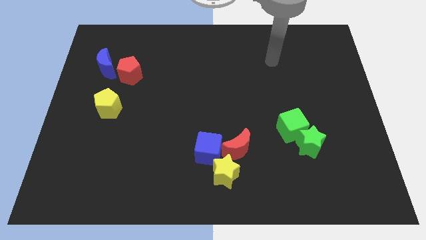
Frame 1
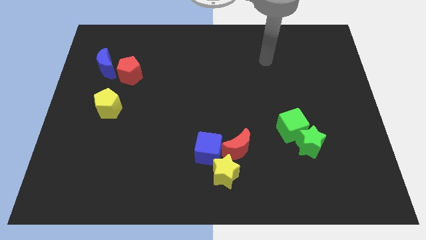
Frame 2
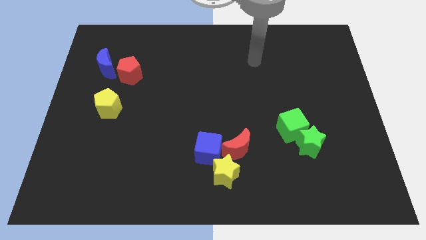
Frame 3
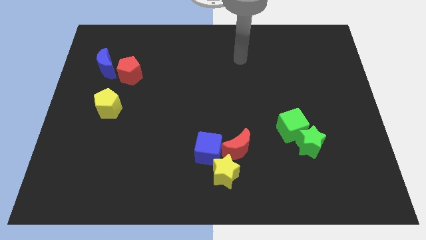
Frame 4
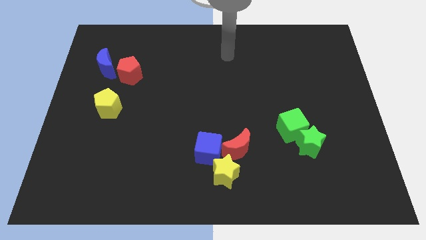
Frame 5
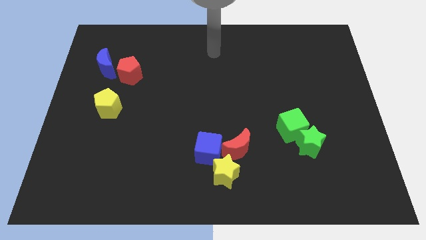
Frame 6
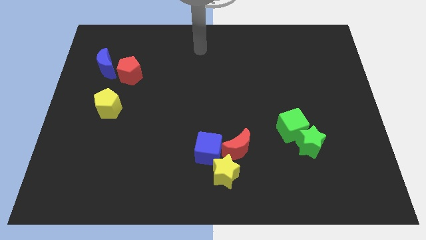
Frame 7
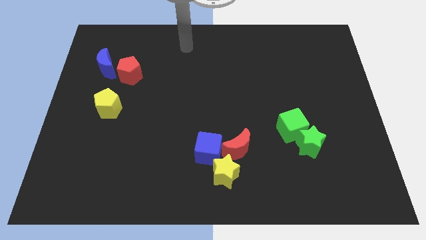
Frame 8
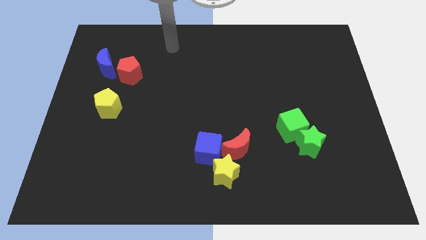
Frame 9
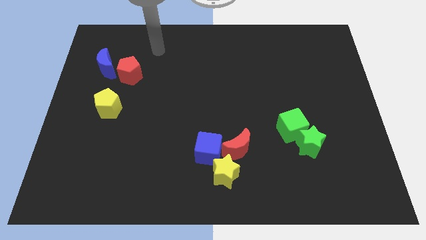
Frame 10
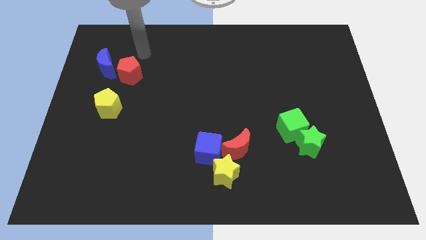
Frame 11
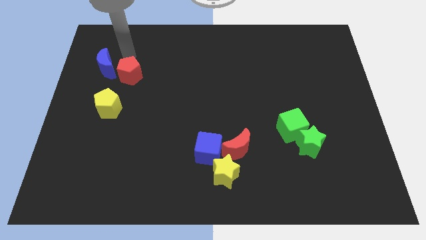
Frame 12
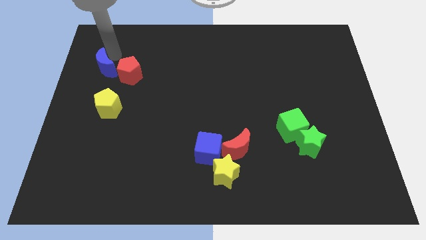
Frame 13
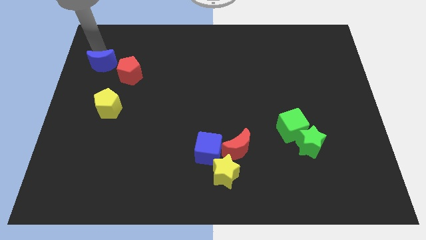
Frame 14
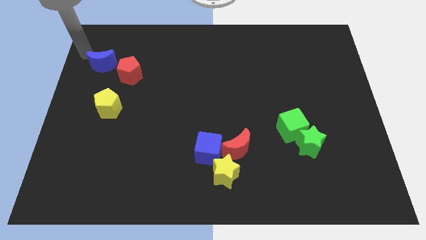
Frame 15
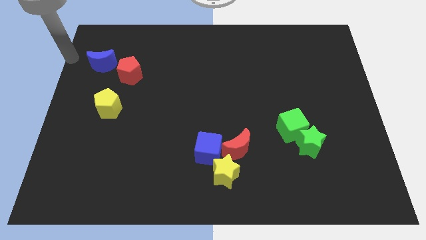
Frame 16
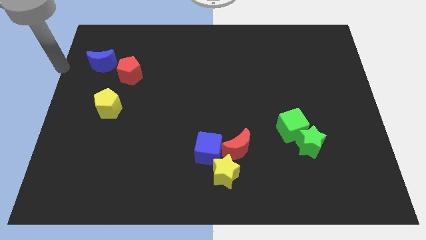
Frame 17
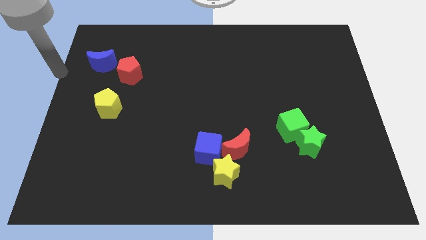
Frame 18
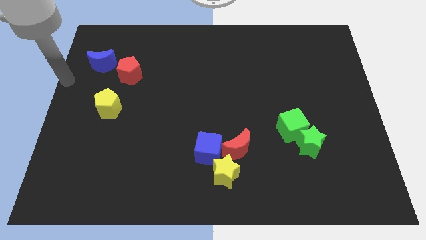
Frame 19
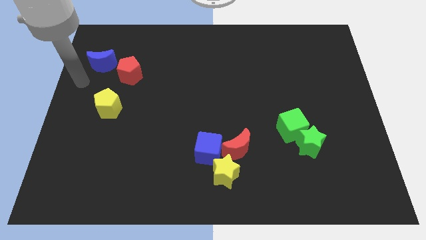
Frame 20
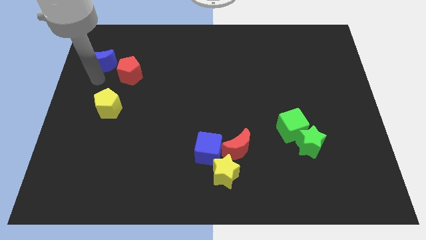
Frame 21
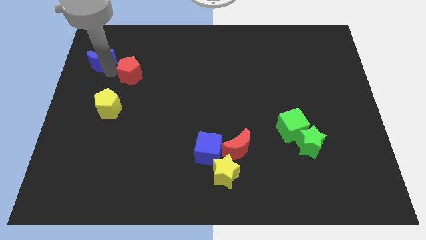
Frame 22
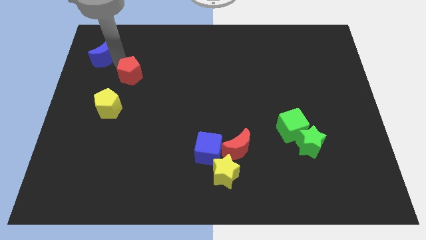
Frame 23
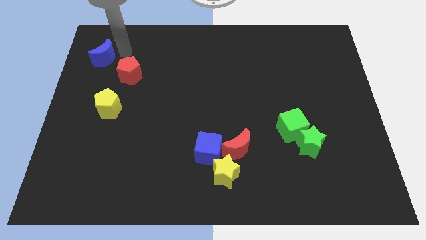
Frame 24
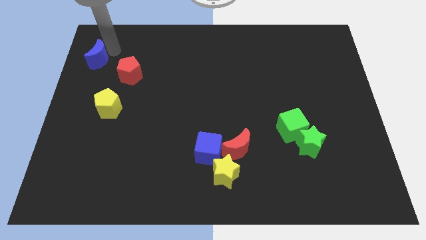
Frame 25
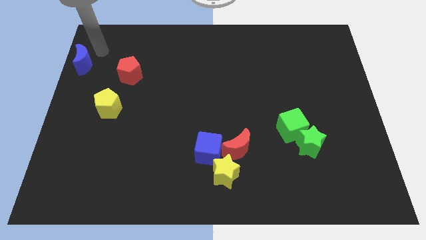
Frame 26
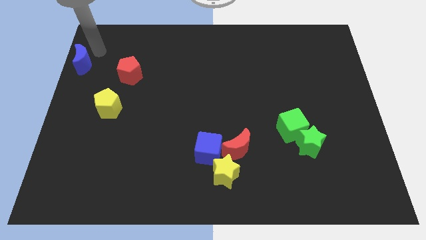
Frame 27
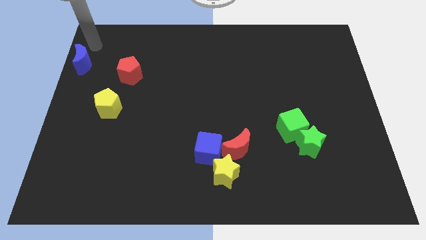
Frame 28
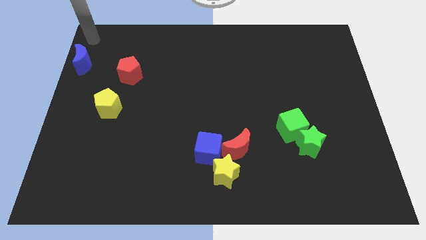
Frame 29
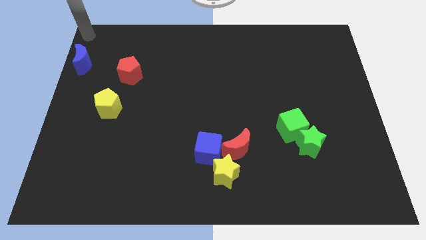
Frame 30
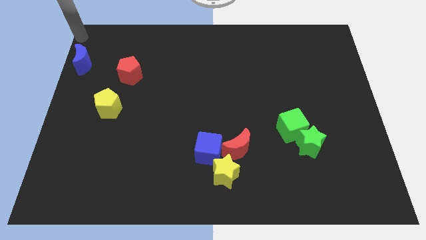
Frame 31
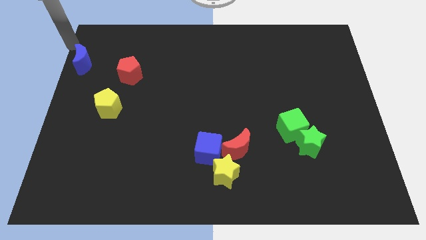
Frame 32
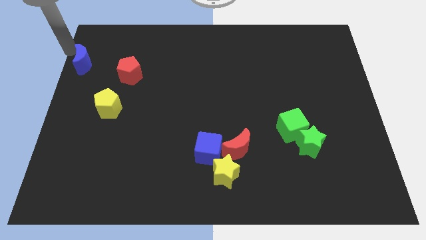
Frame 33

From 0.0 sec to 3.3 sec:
separate the blue crescent from the left side of the red pentagon

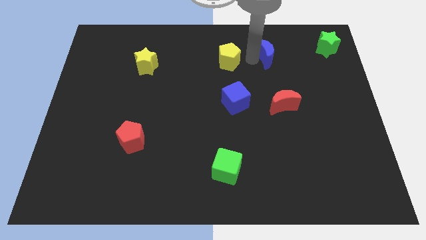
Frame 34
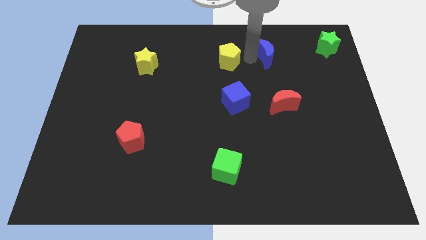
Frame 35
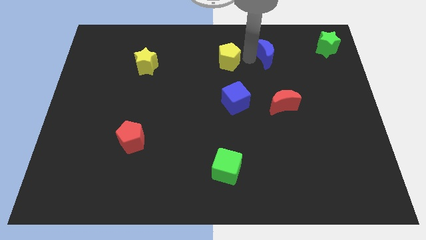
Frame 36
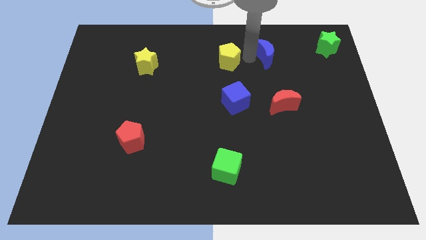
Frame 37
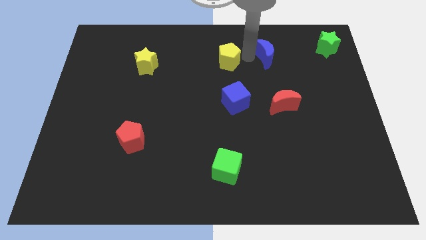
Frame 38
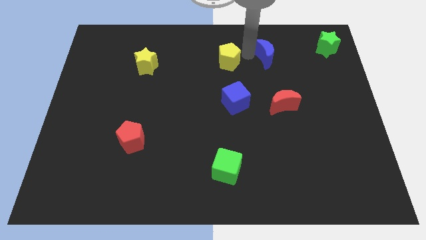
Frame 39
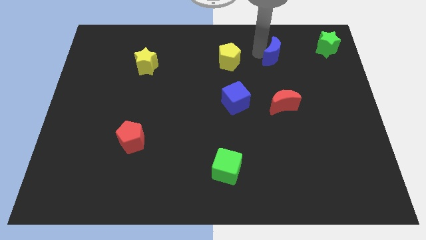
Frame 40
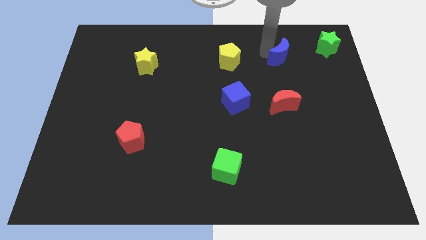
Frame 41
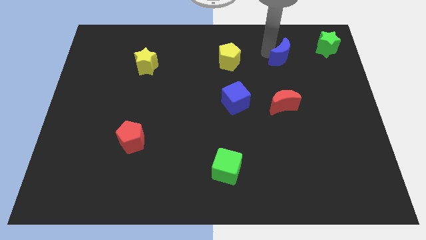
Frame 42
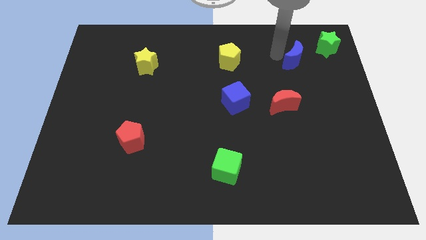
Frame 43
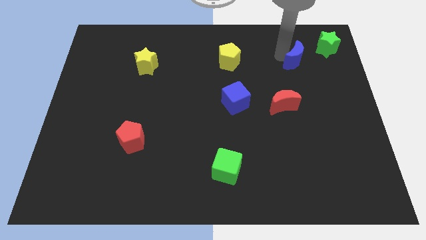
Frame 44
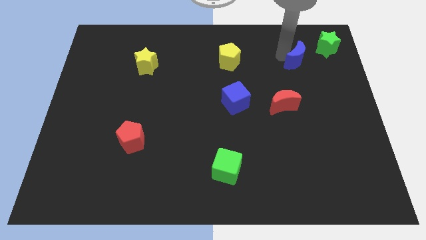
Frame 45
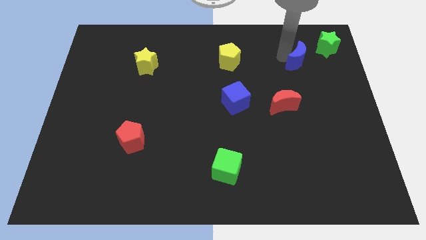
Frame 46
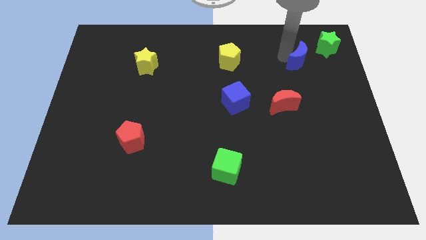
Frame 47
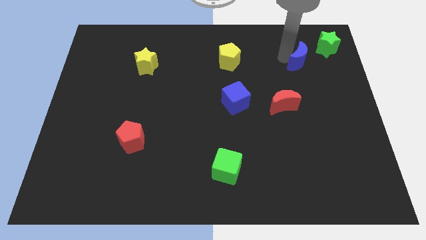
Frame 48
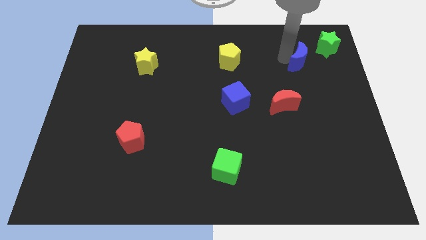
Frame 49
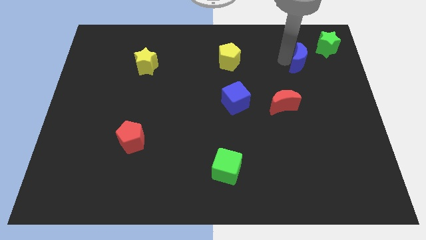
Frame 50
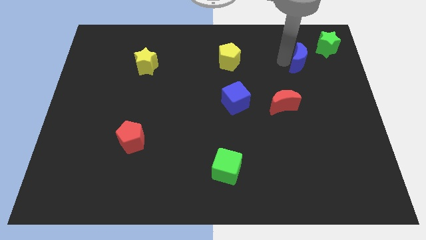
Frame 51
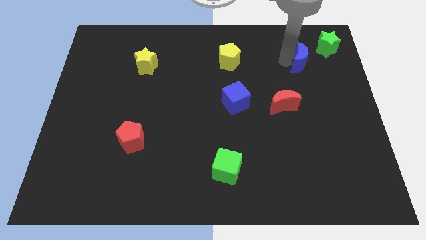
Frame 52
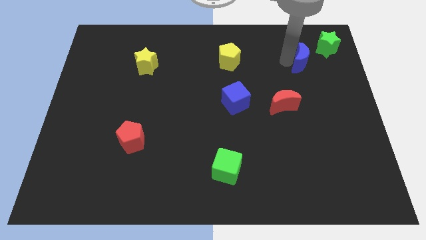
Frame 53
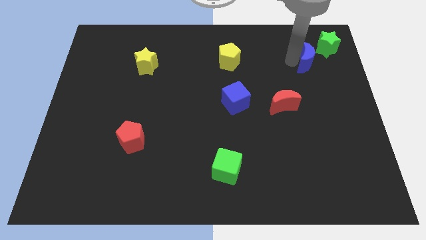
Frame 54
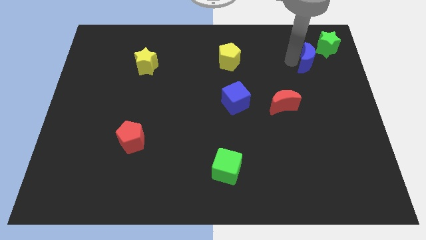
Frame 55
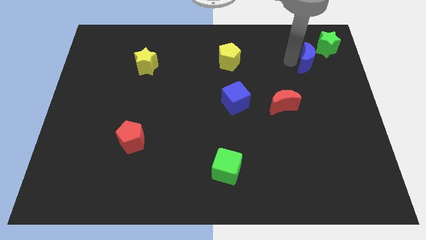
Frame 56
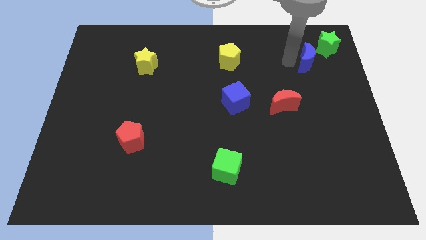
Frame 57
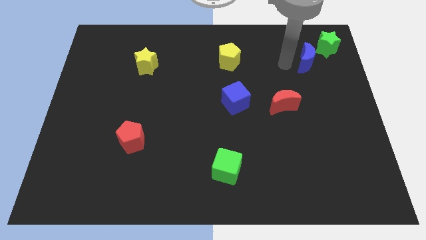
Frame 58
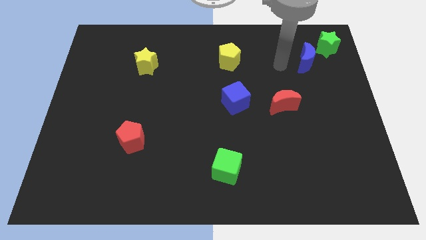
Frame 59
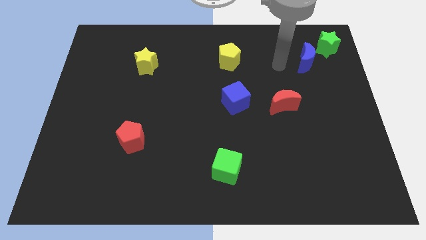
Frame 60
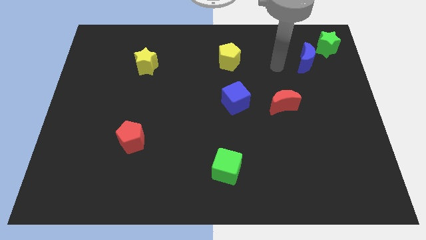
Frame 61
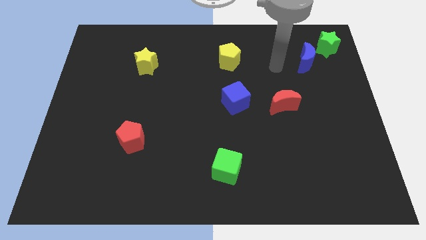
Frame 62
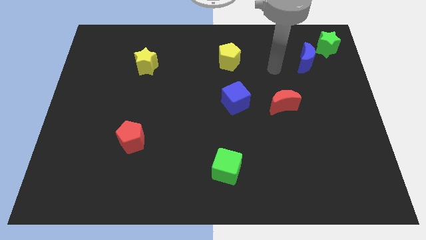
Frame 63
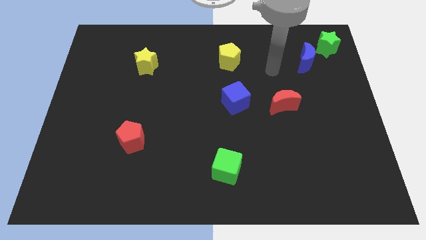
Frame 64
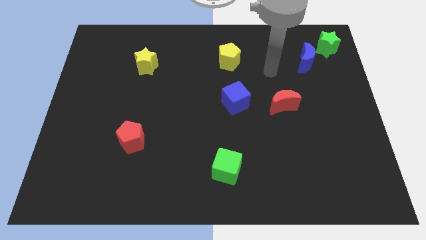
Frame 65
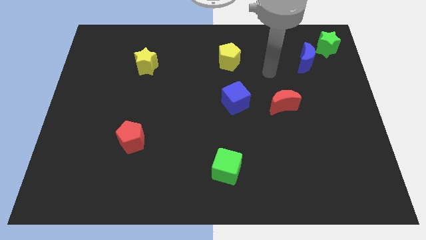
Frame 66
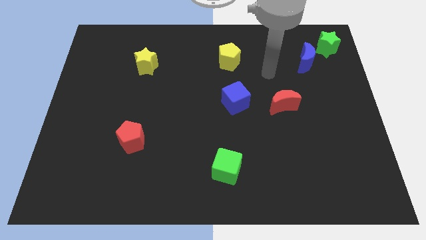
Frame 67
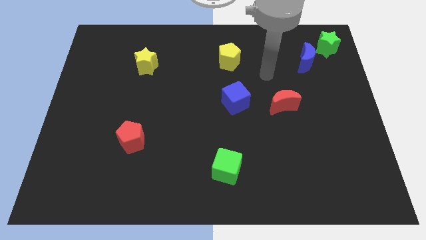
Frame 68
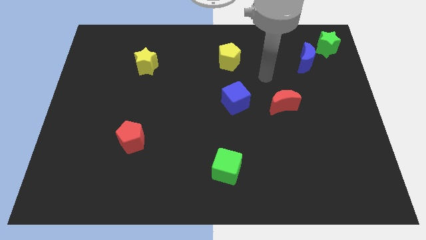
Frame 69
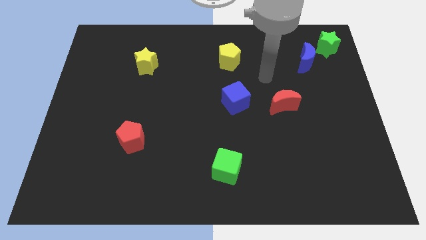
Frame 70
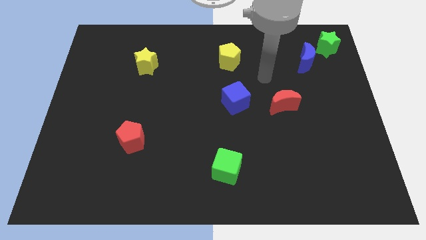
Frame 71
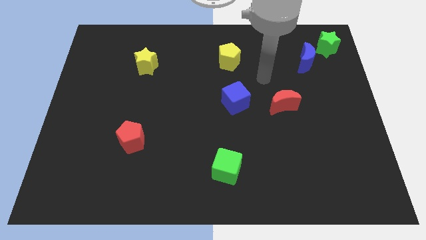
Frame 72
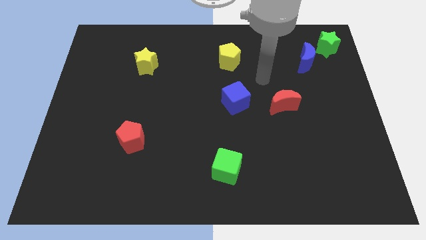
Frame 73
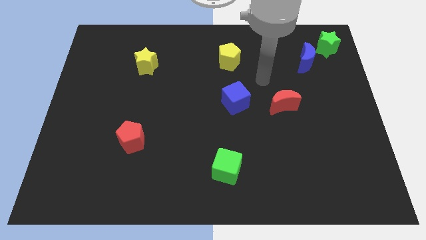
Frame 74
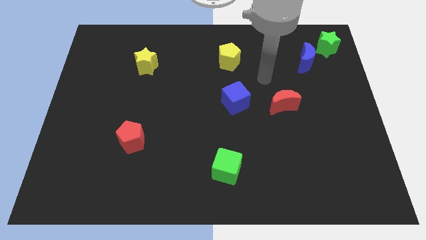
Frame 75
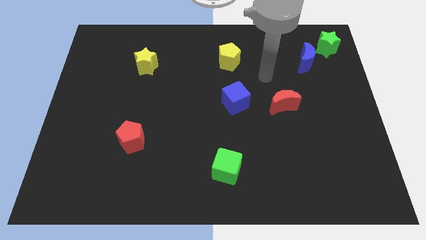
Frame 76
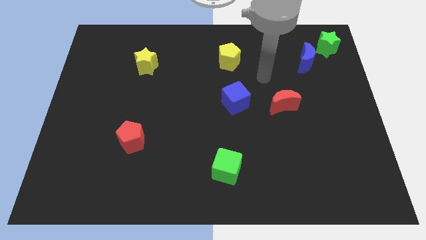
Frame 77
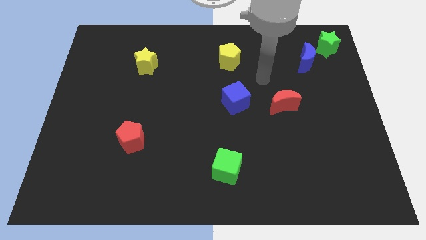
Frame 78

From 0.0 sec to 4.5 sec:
push the blue crescent near to the green star

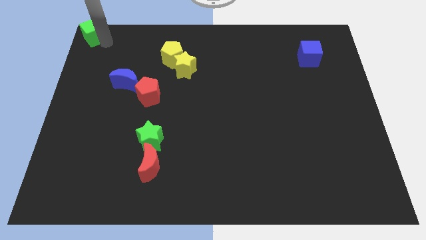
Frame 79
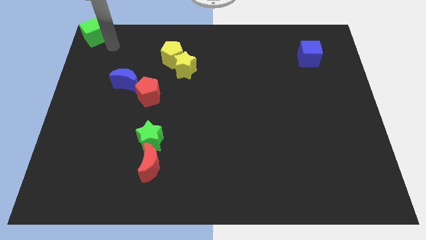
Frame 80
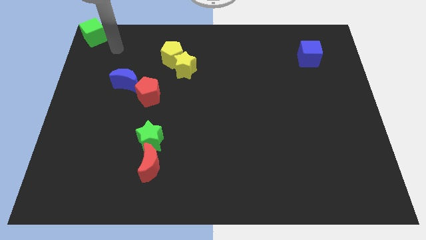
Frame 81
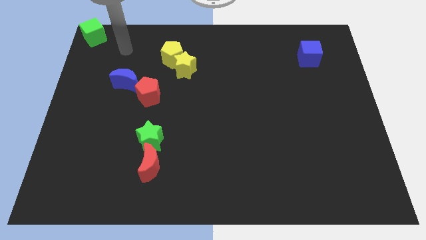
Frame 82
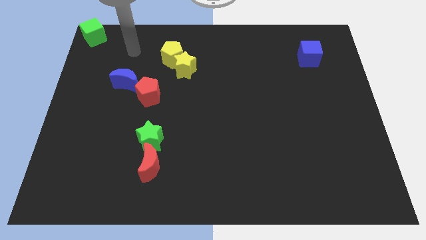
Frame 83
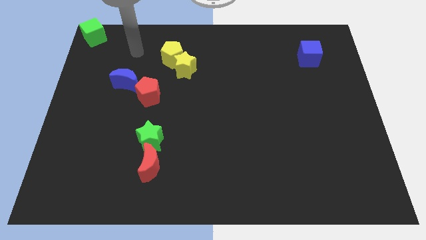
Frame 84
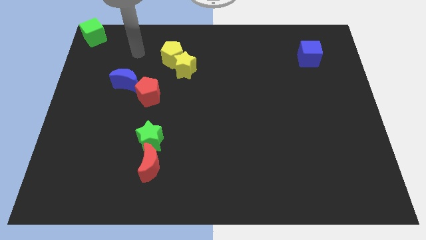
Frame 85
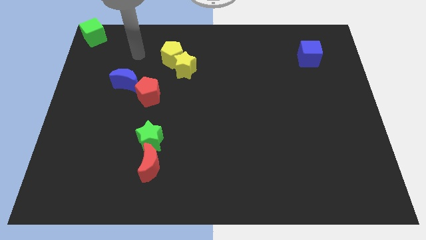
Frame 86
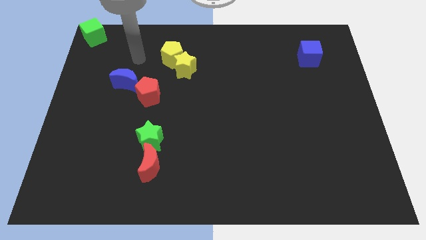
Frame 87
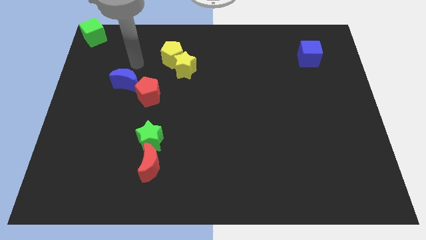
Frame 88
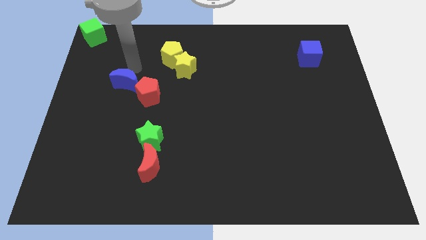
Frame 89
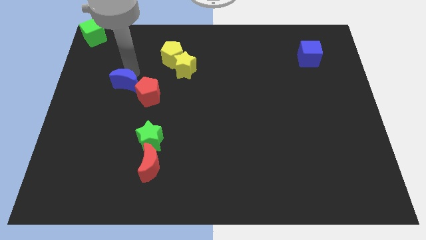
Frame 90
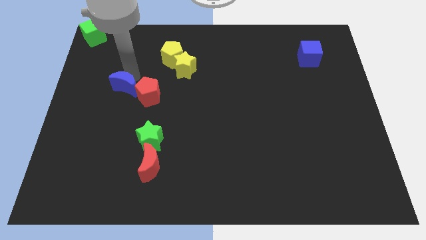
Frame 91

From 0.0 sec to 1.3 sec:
point your arm at the top of blue moon
